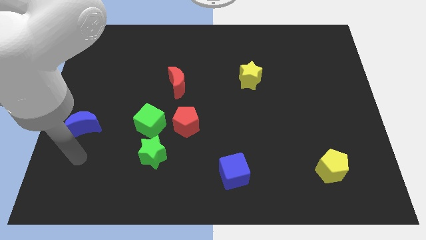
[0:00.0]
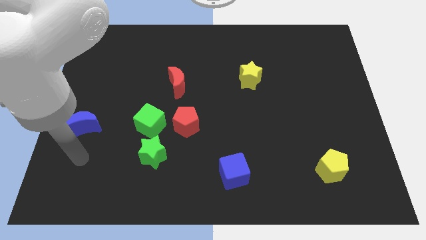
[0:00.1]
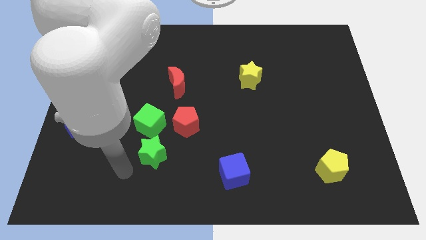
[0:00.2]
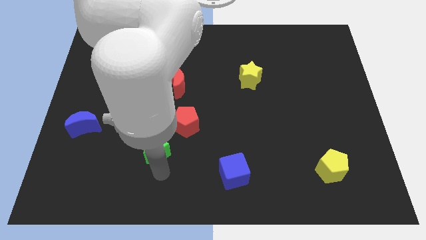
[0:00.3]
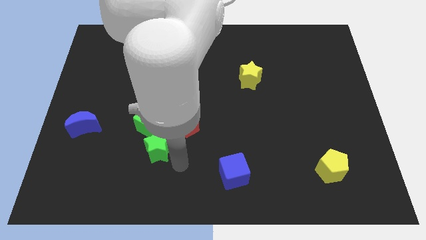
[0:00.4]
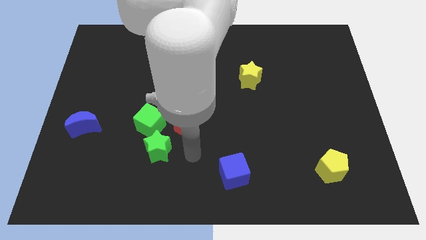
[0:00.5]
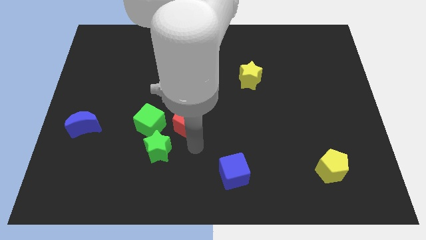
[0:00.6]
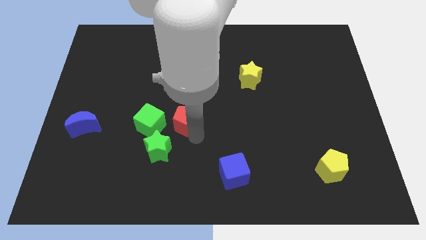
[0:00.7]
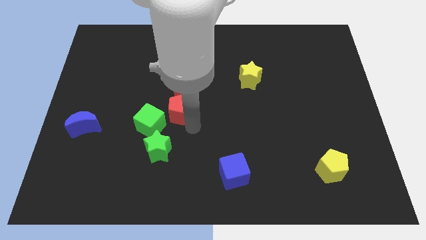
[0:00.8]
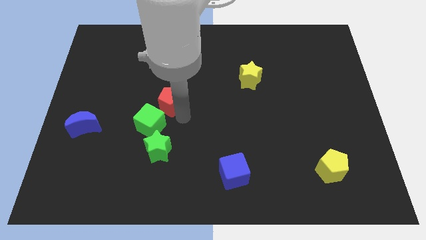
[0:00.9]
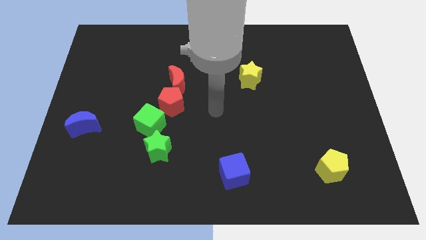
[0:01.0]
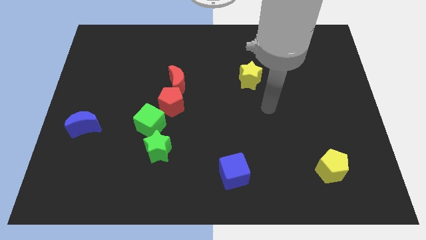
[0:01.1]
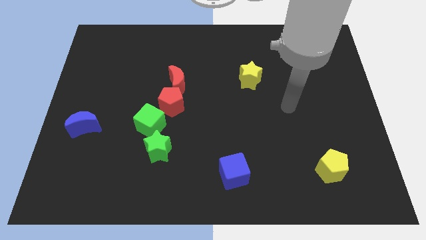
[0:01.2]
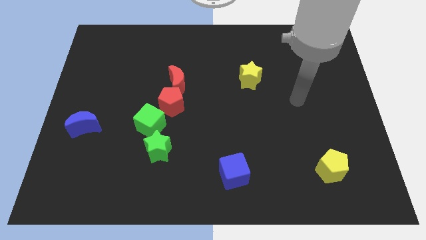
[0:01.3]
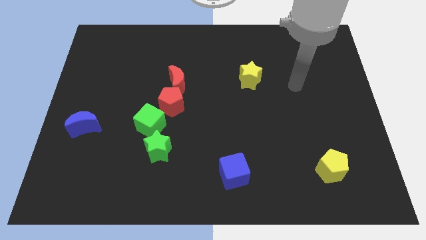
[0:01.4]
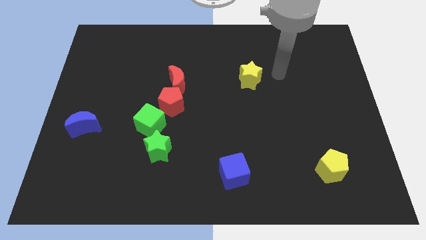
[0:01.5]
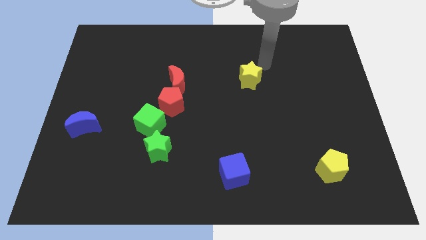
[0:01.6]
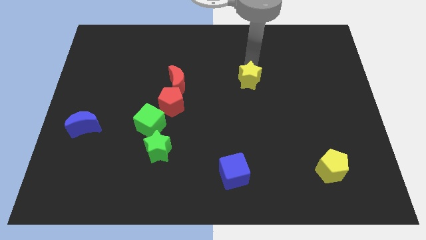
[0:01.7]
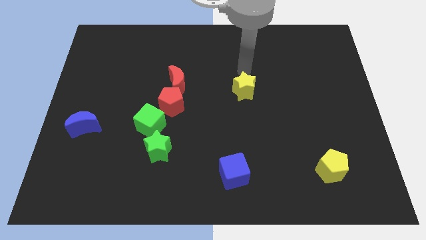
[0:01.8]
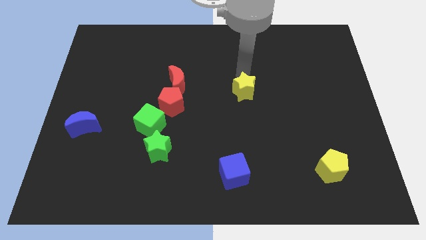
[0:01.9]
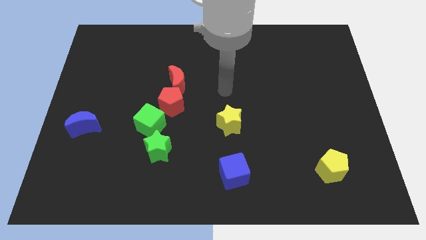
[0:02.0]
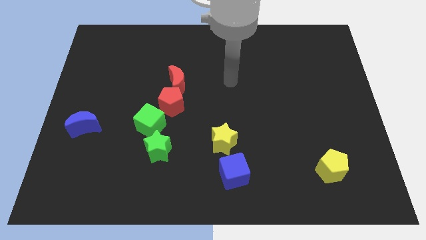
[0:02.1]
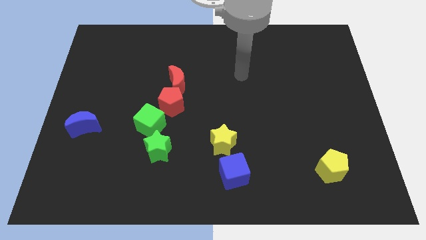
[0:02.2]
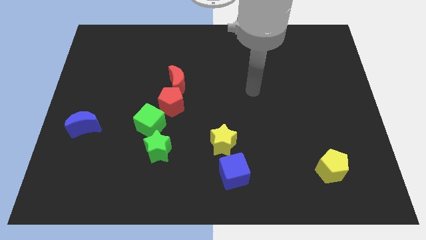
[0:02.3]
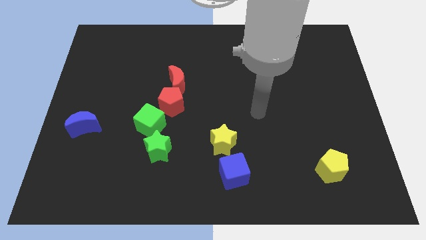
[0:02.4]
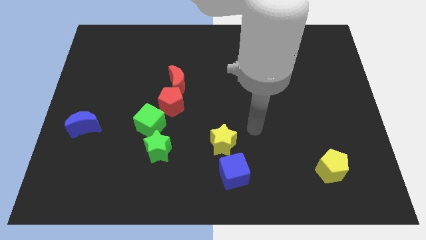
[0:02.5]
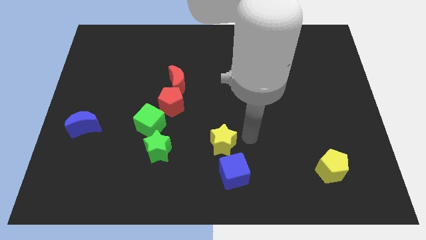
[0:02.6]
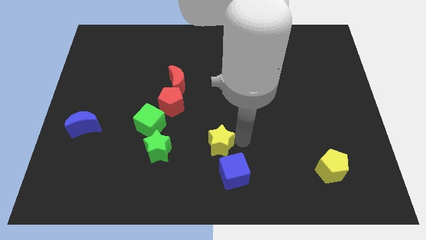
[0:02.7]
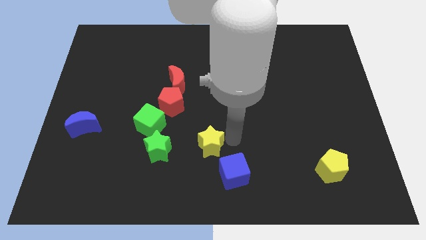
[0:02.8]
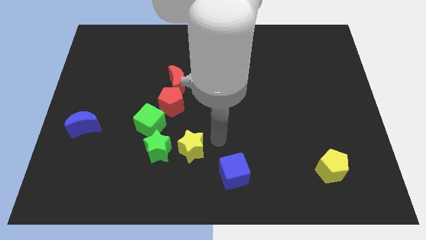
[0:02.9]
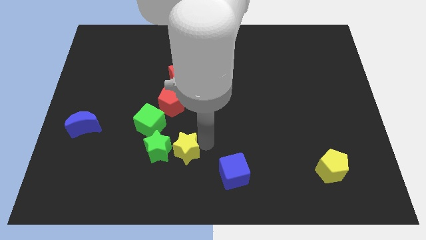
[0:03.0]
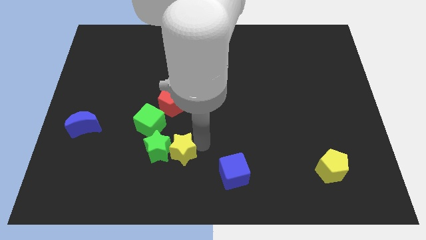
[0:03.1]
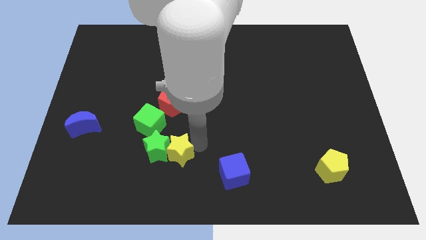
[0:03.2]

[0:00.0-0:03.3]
put the yellow star towards the green star

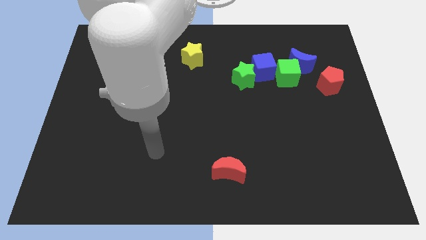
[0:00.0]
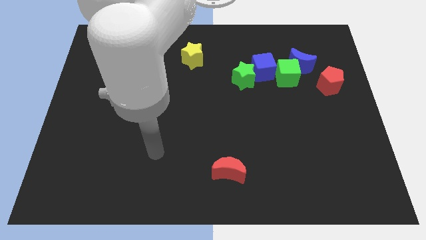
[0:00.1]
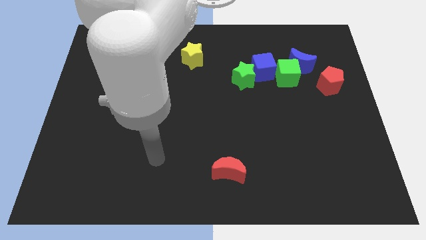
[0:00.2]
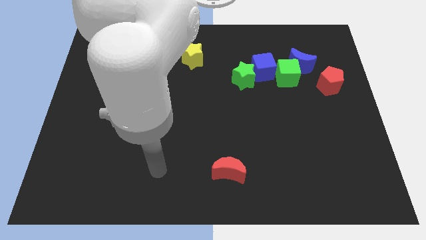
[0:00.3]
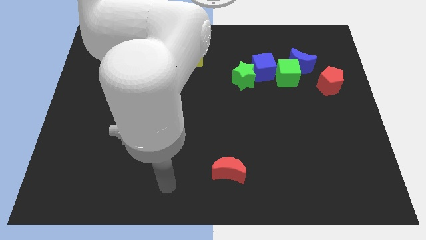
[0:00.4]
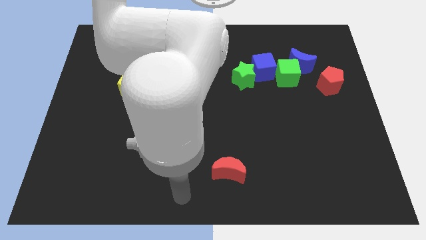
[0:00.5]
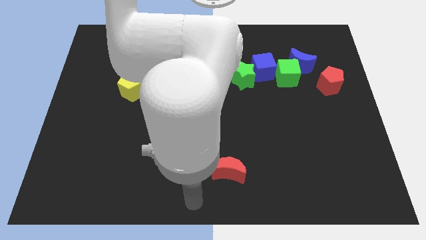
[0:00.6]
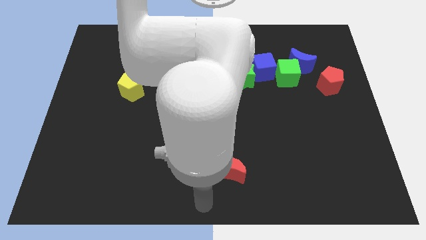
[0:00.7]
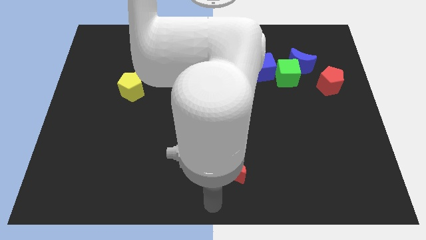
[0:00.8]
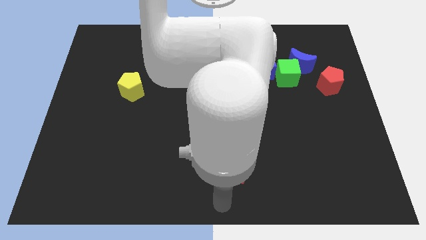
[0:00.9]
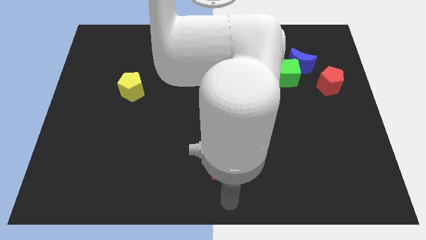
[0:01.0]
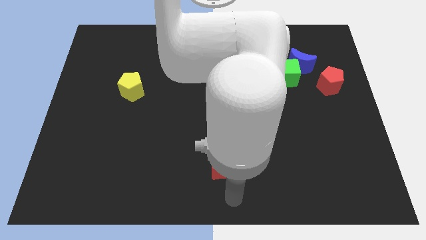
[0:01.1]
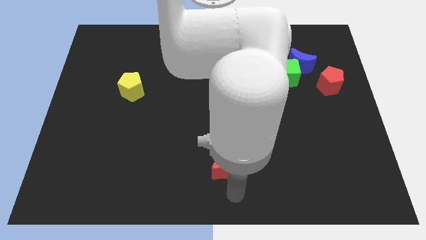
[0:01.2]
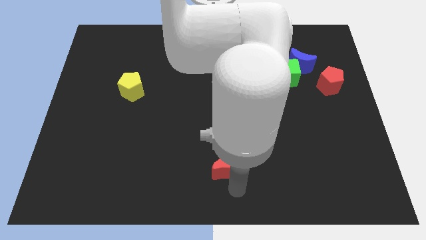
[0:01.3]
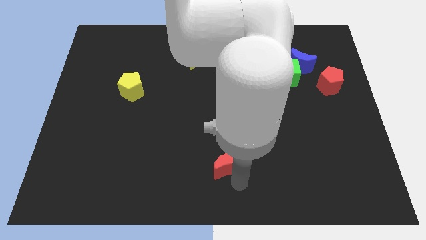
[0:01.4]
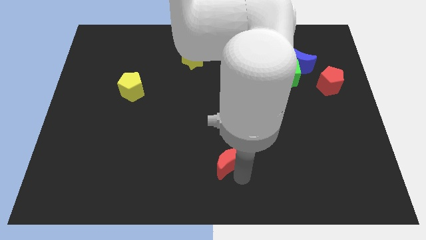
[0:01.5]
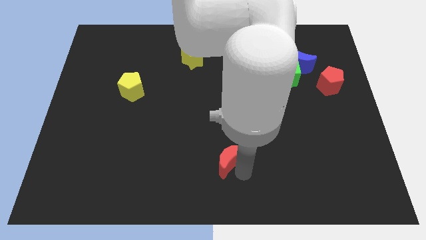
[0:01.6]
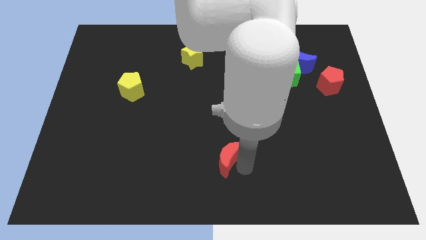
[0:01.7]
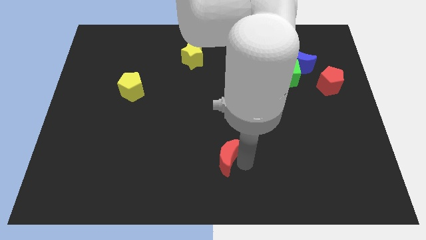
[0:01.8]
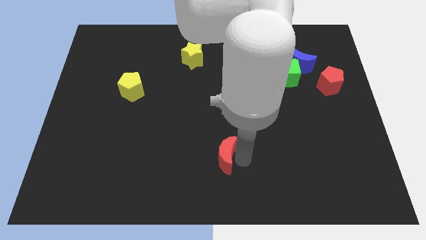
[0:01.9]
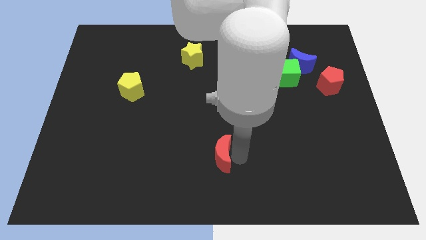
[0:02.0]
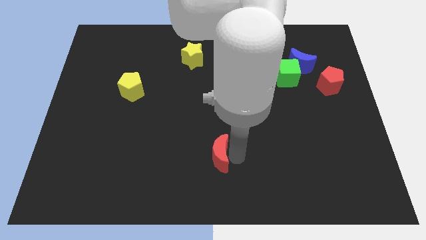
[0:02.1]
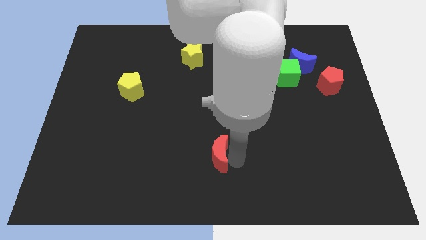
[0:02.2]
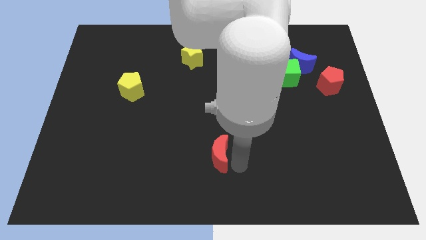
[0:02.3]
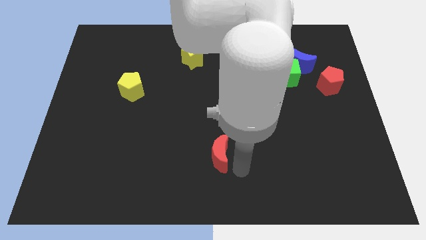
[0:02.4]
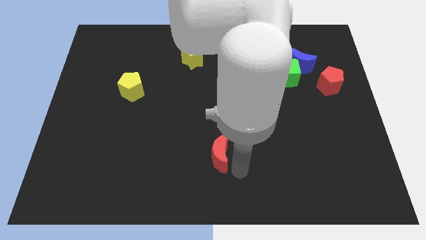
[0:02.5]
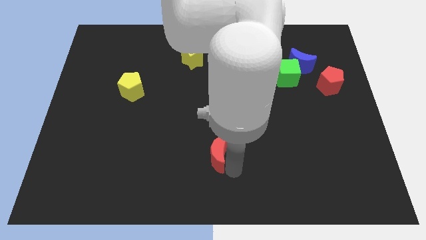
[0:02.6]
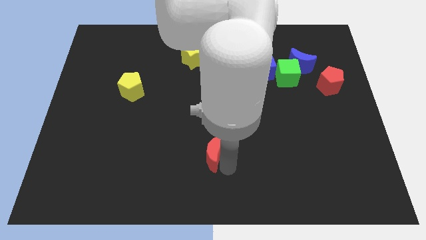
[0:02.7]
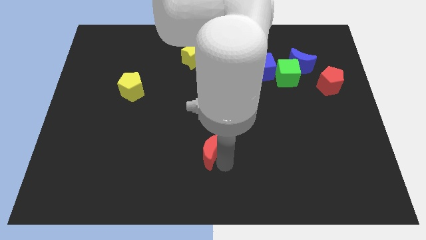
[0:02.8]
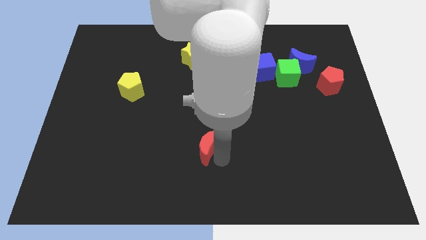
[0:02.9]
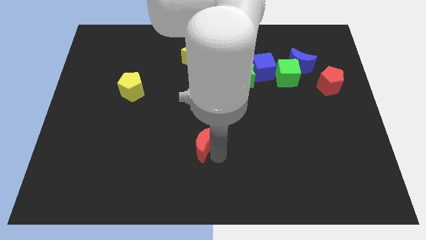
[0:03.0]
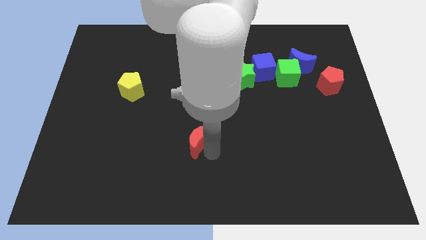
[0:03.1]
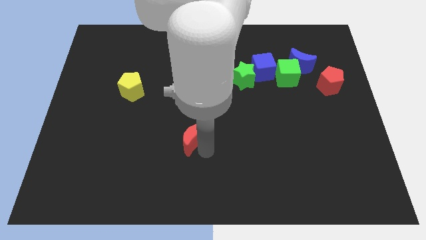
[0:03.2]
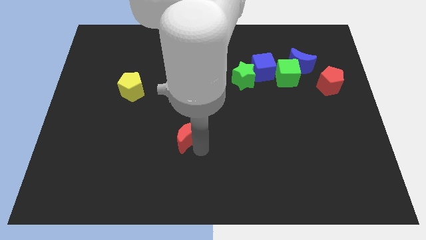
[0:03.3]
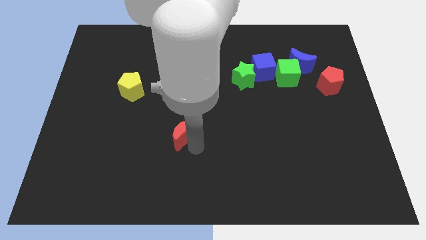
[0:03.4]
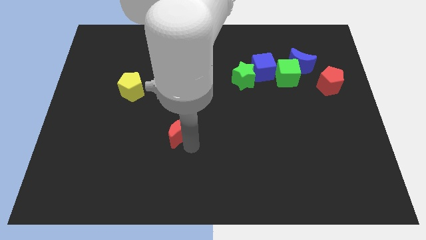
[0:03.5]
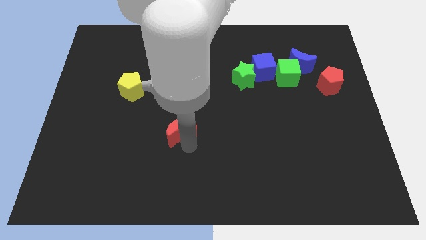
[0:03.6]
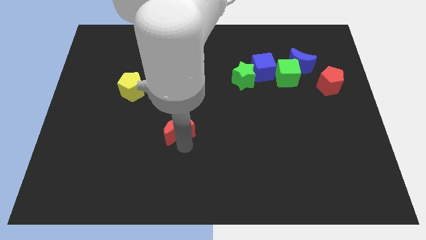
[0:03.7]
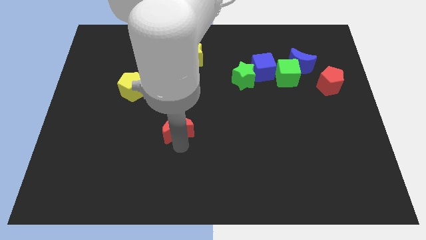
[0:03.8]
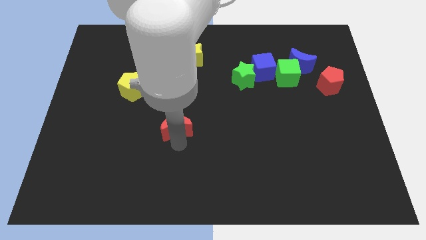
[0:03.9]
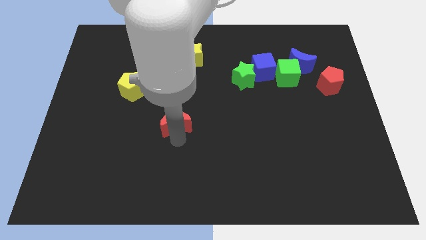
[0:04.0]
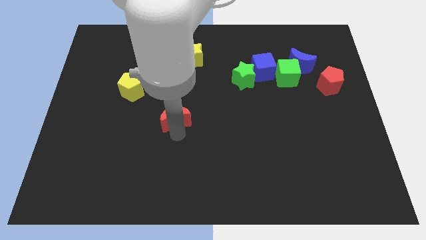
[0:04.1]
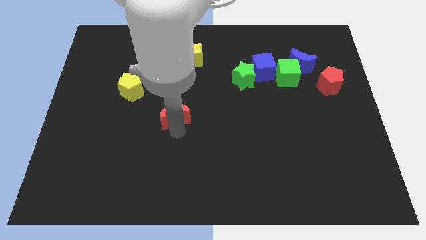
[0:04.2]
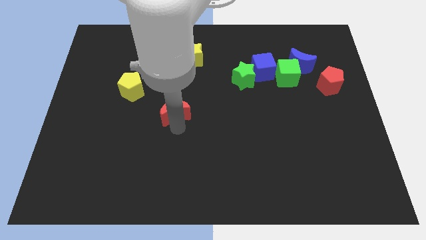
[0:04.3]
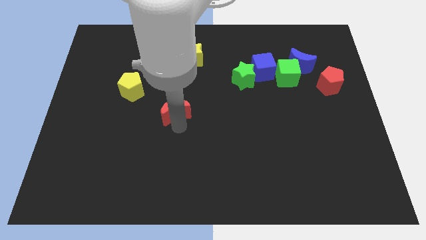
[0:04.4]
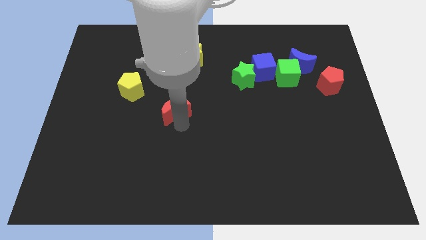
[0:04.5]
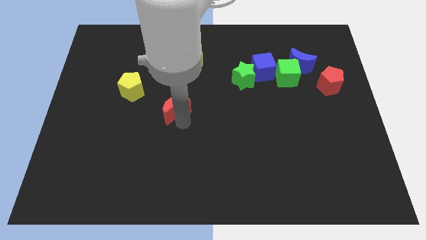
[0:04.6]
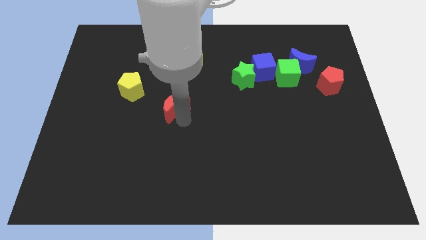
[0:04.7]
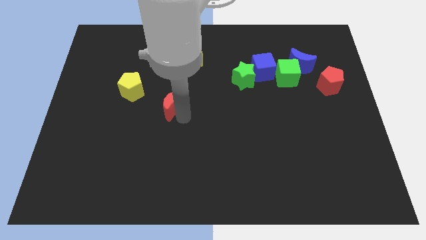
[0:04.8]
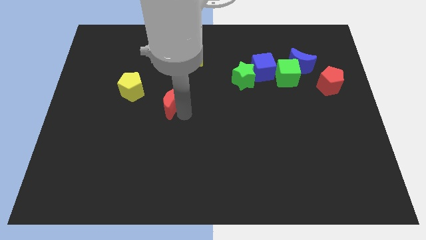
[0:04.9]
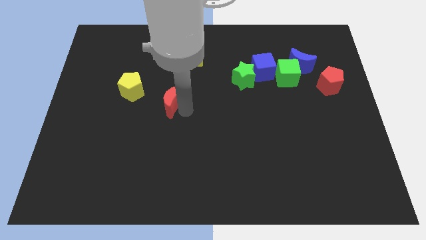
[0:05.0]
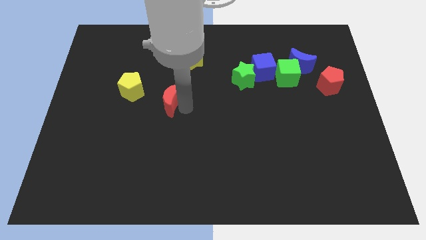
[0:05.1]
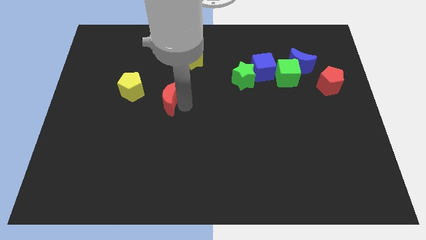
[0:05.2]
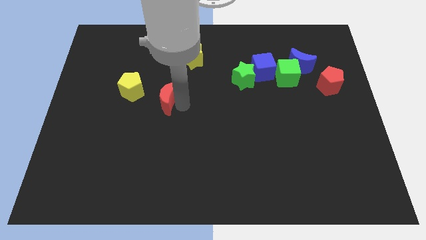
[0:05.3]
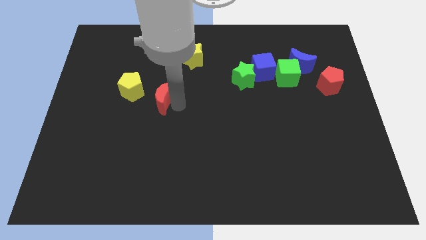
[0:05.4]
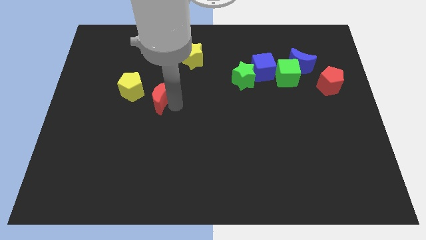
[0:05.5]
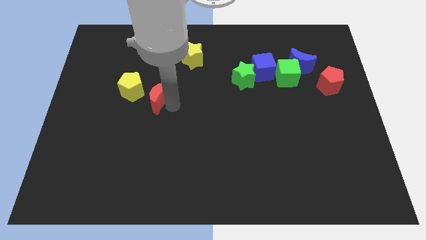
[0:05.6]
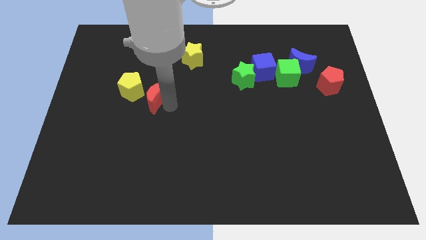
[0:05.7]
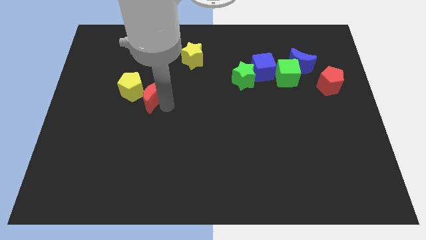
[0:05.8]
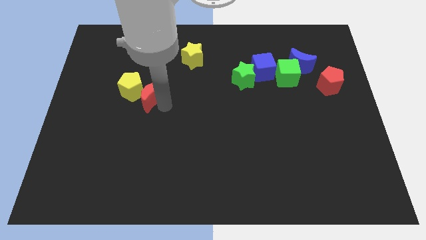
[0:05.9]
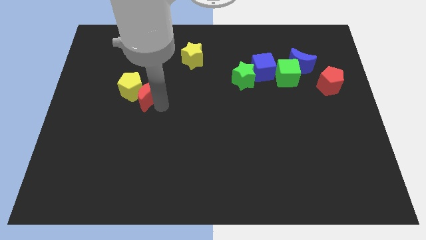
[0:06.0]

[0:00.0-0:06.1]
move the red moon next to the yellow pentagon
